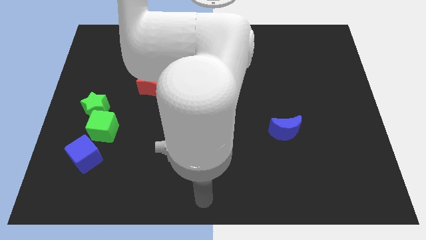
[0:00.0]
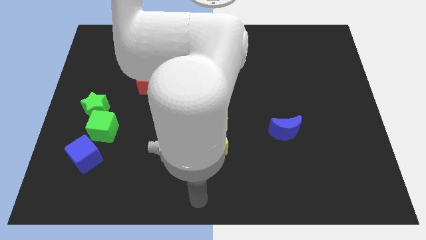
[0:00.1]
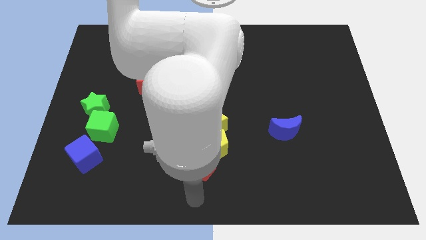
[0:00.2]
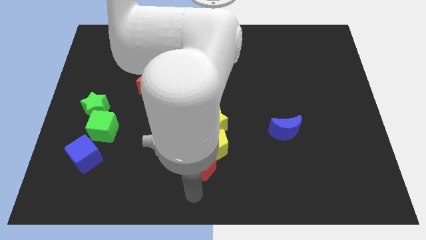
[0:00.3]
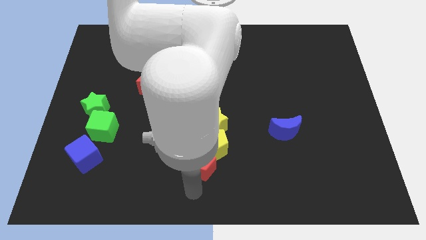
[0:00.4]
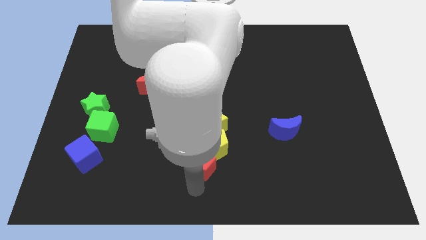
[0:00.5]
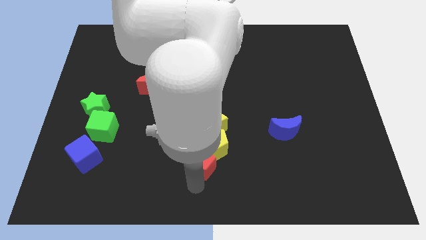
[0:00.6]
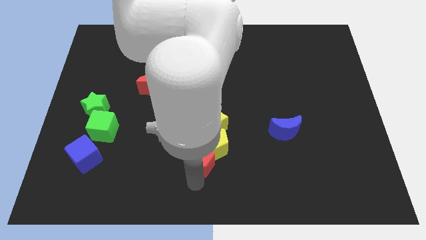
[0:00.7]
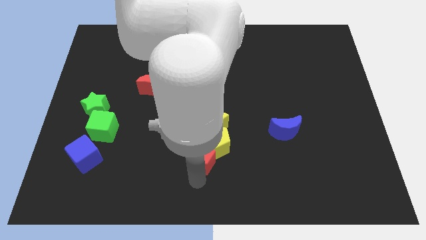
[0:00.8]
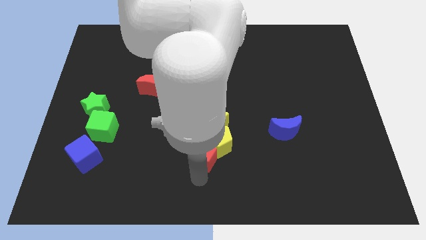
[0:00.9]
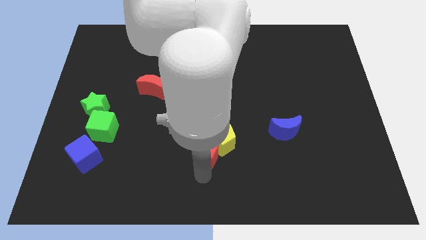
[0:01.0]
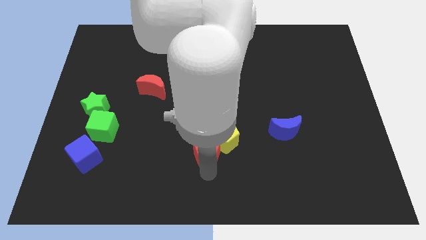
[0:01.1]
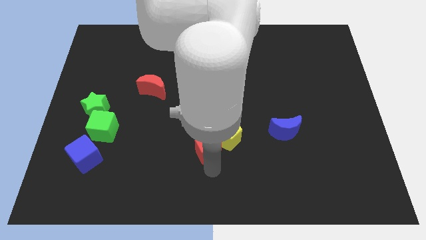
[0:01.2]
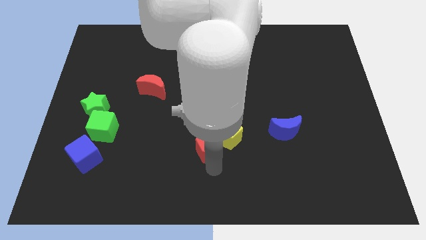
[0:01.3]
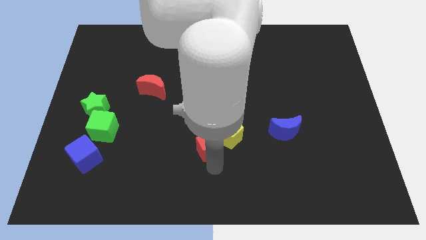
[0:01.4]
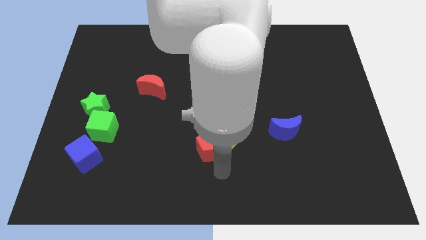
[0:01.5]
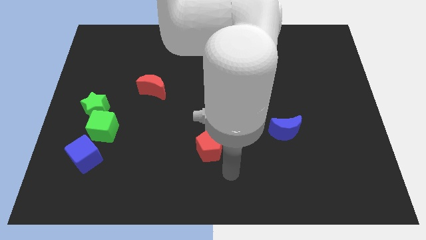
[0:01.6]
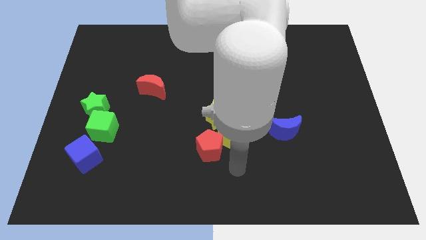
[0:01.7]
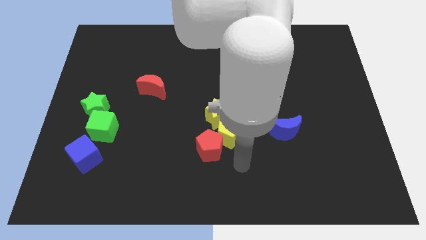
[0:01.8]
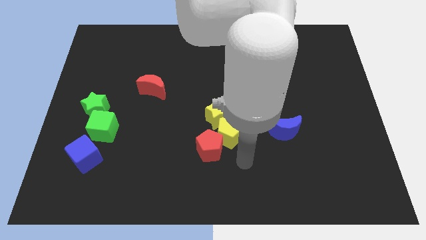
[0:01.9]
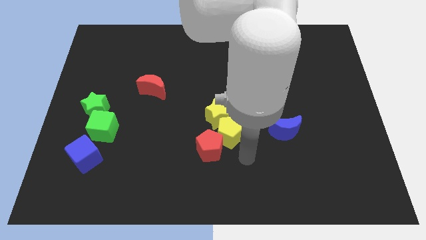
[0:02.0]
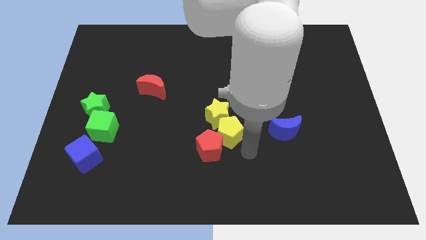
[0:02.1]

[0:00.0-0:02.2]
place your arm to the right of the red pentagon

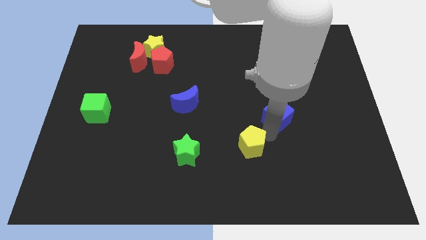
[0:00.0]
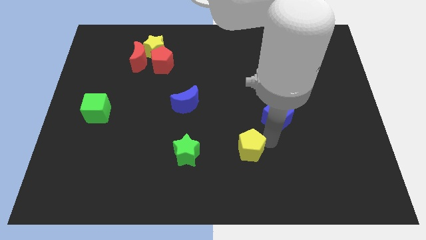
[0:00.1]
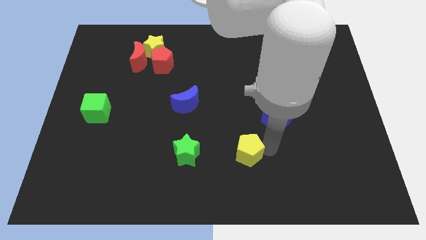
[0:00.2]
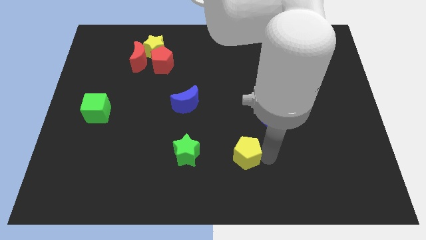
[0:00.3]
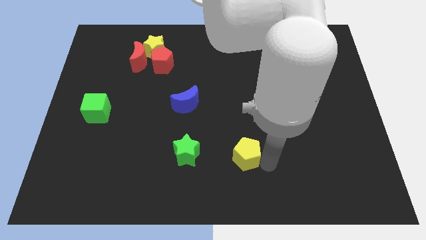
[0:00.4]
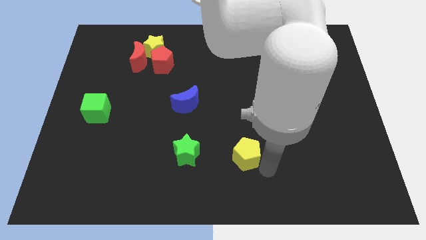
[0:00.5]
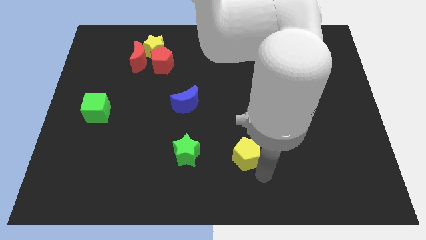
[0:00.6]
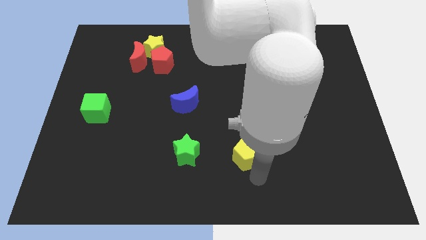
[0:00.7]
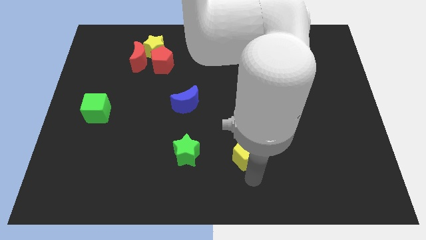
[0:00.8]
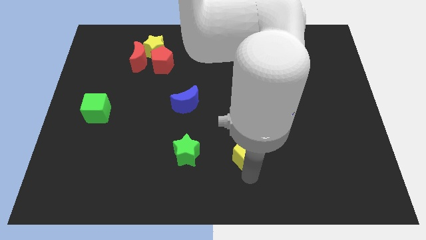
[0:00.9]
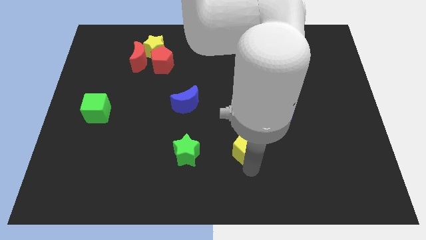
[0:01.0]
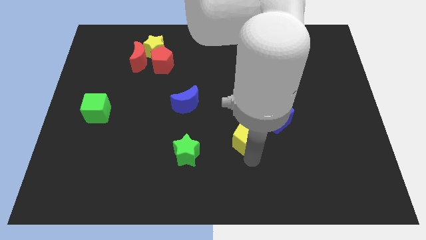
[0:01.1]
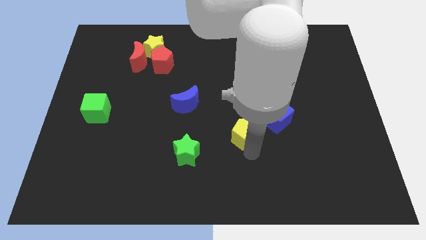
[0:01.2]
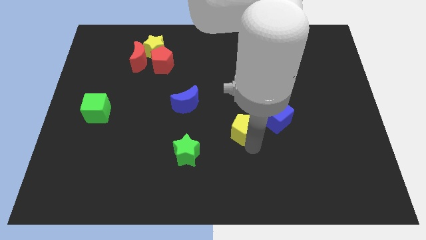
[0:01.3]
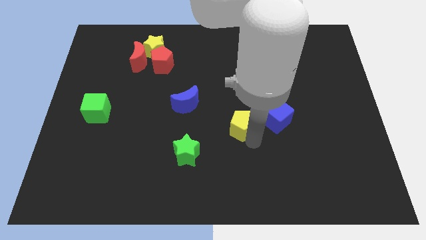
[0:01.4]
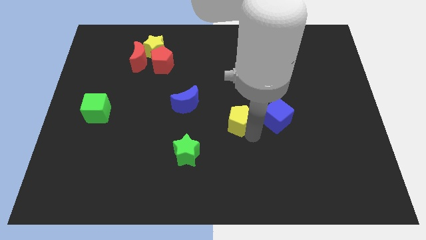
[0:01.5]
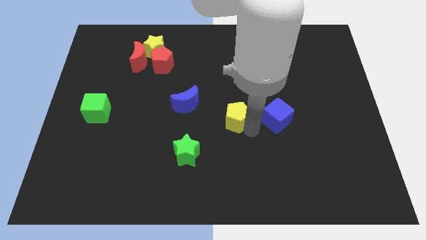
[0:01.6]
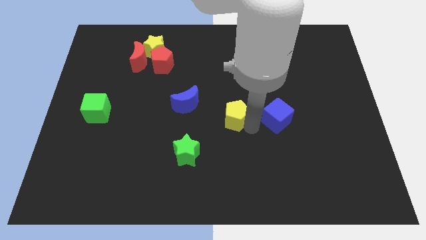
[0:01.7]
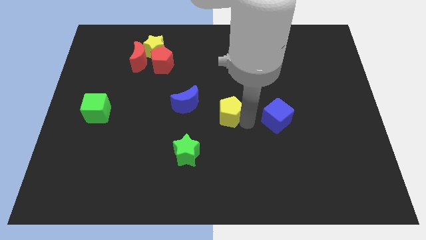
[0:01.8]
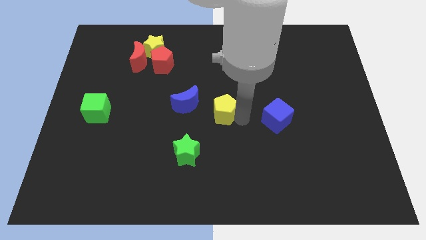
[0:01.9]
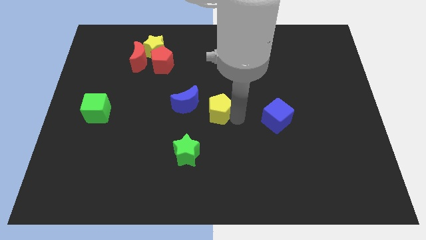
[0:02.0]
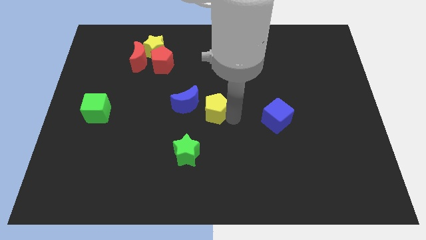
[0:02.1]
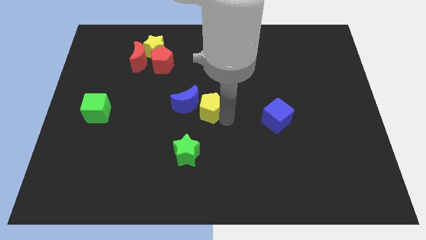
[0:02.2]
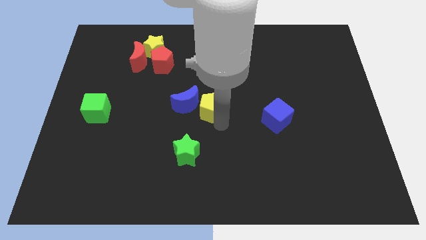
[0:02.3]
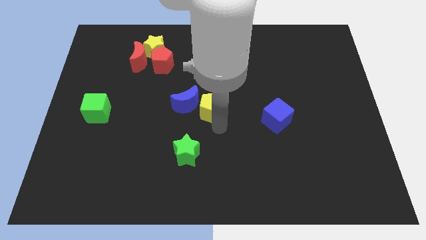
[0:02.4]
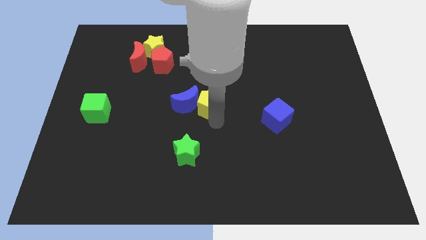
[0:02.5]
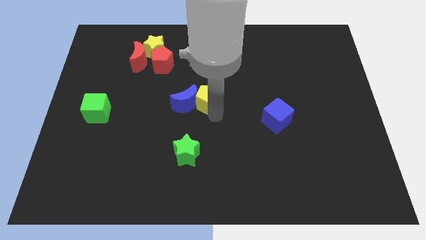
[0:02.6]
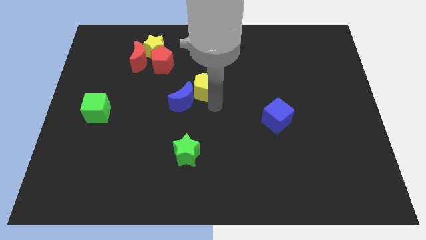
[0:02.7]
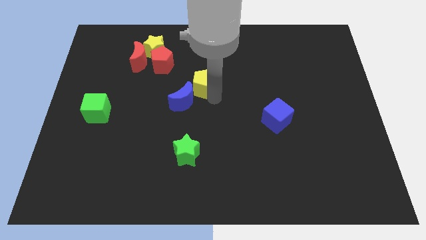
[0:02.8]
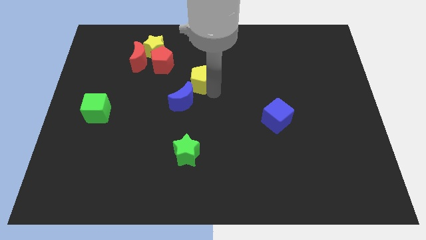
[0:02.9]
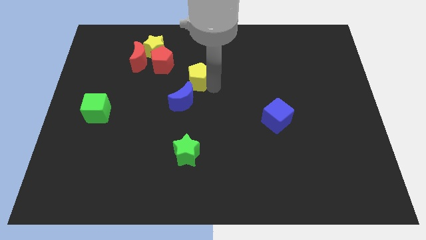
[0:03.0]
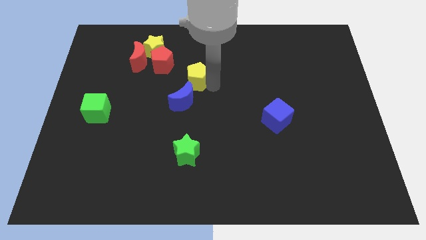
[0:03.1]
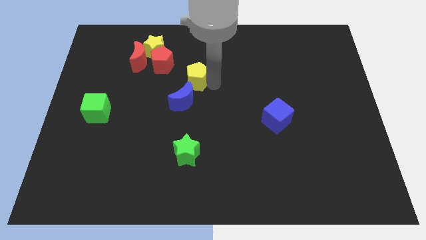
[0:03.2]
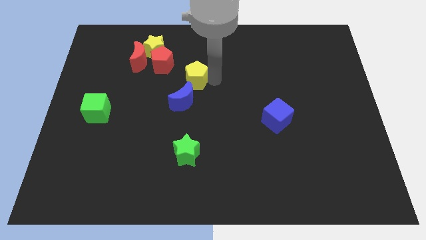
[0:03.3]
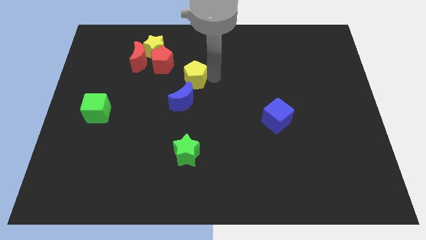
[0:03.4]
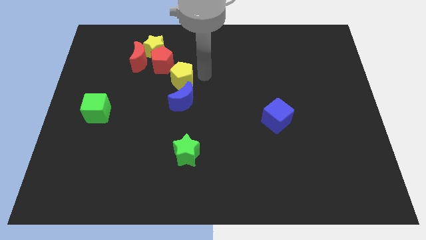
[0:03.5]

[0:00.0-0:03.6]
place yellow pentagon above the blue crescent

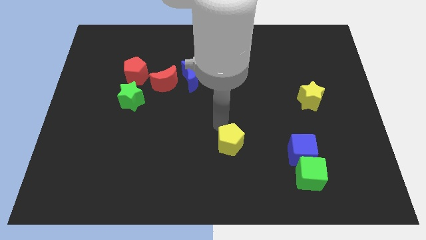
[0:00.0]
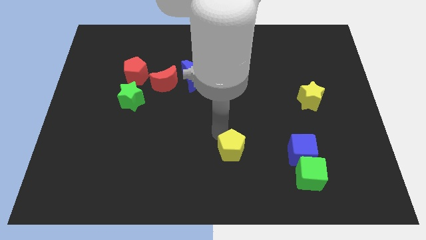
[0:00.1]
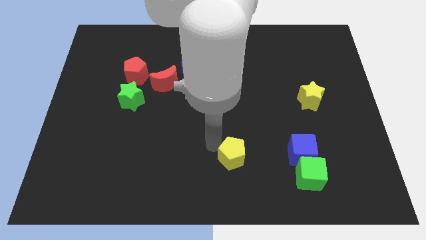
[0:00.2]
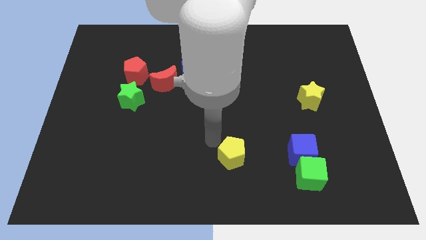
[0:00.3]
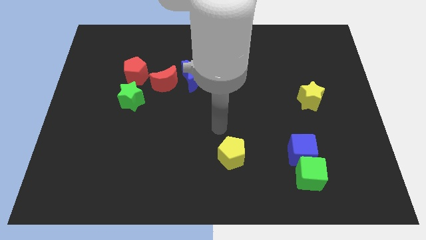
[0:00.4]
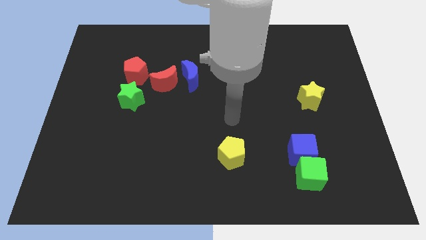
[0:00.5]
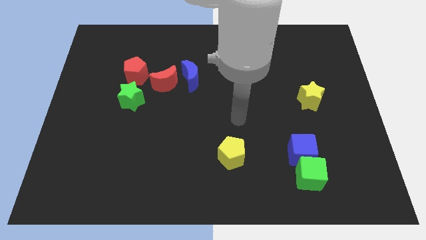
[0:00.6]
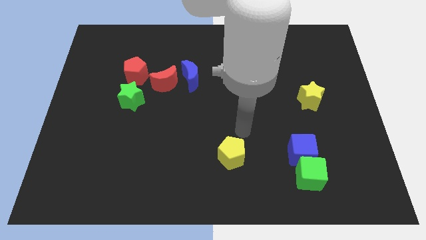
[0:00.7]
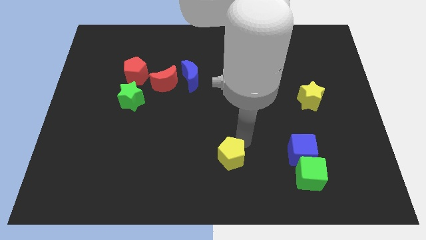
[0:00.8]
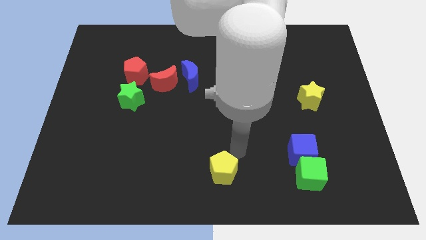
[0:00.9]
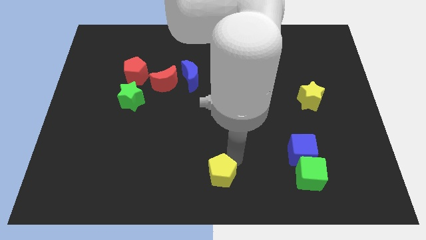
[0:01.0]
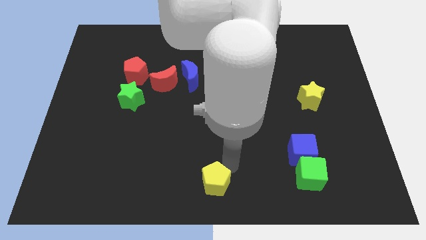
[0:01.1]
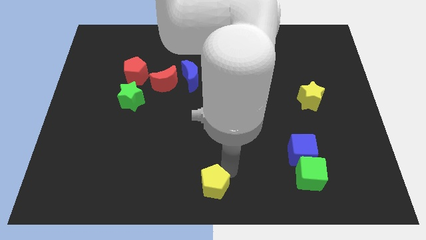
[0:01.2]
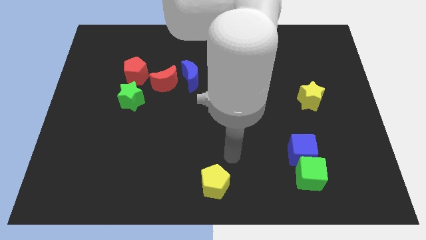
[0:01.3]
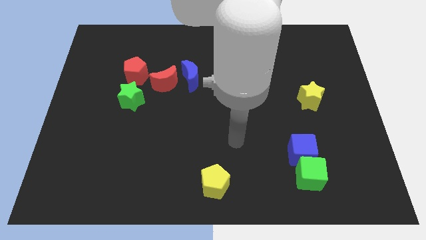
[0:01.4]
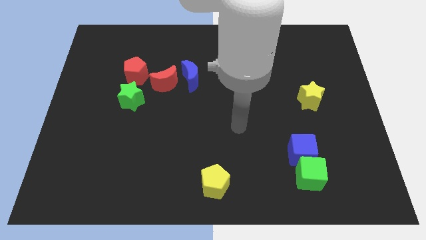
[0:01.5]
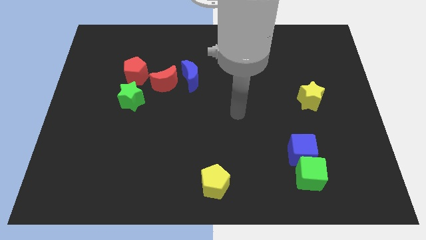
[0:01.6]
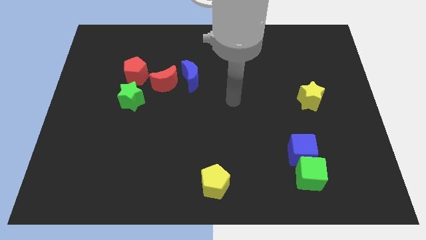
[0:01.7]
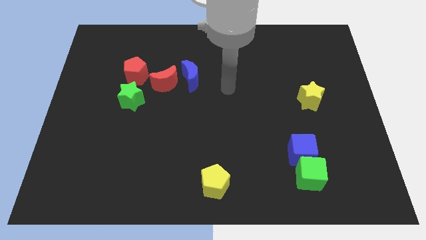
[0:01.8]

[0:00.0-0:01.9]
push the yellow pentagon towards the center bottom of the board

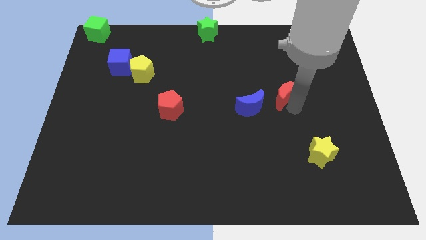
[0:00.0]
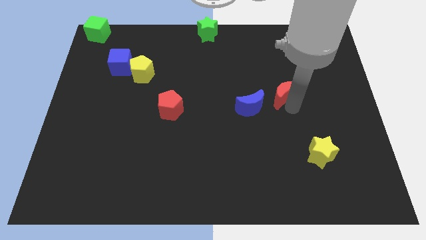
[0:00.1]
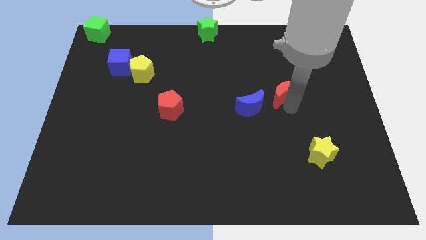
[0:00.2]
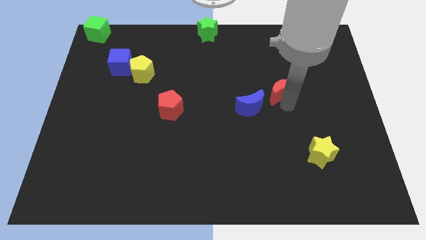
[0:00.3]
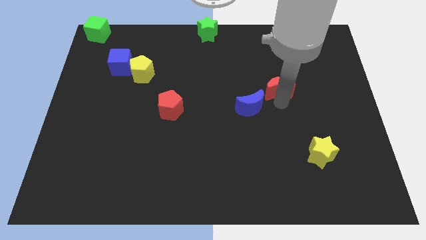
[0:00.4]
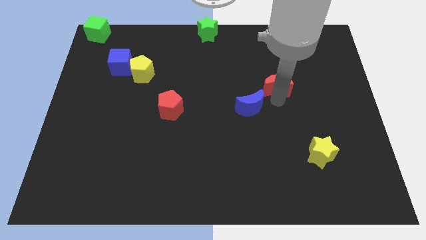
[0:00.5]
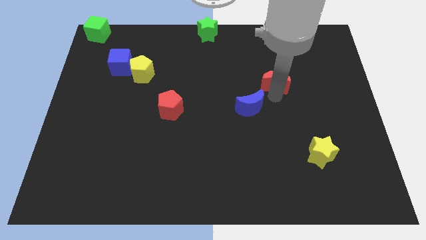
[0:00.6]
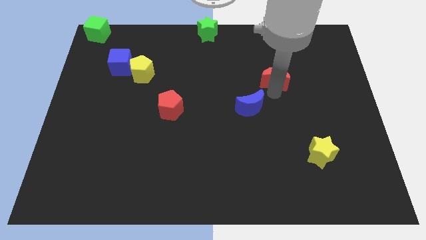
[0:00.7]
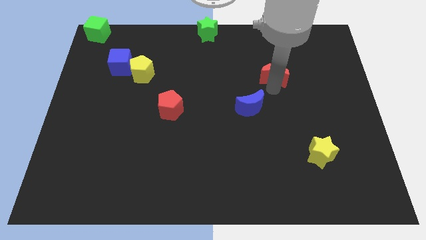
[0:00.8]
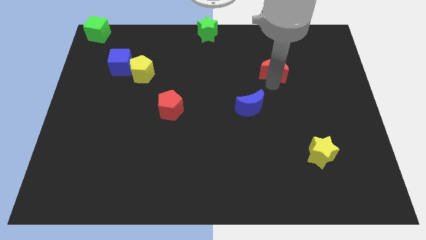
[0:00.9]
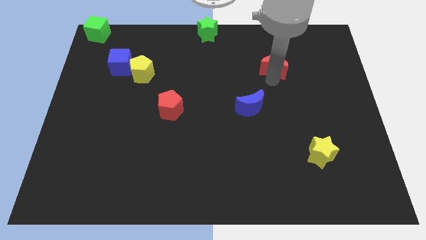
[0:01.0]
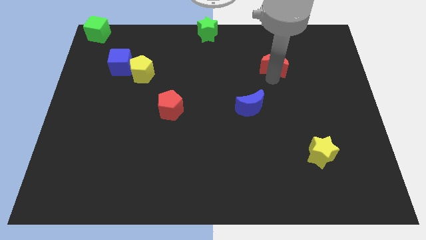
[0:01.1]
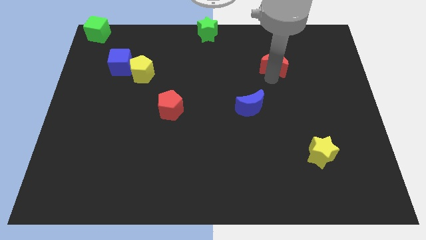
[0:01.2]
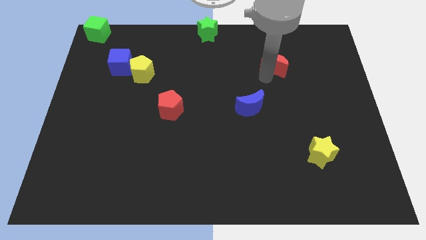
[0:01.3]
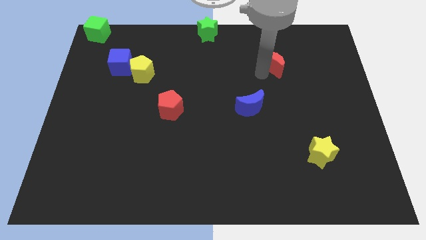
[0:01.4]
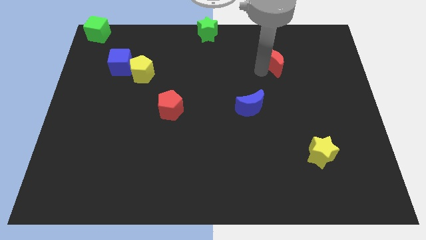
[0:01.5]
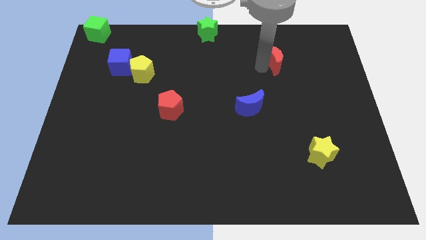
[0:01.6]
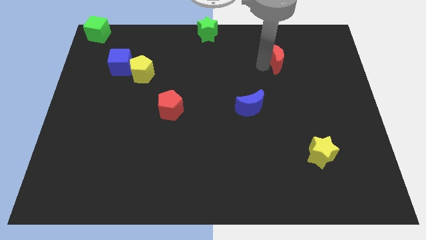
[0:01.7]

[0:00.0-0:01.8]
place the red moon diagonally top right to the red pentagon
